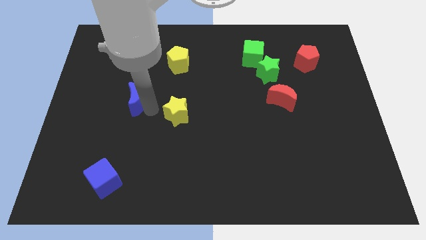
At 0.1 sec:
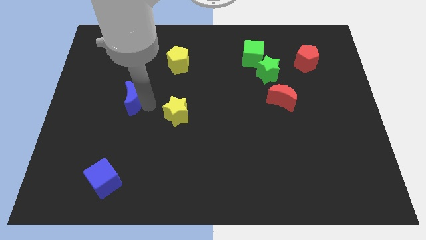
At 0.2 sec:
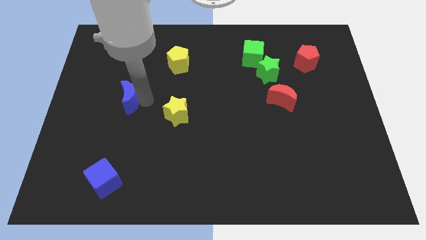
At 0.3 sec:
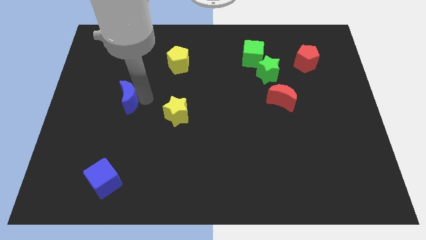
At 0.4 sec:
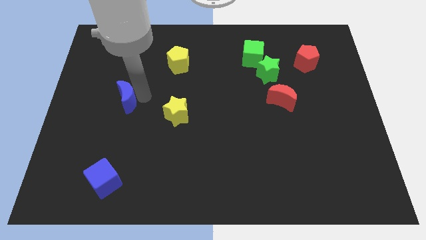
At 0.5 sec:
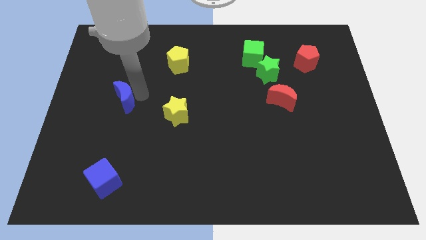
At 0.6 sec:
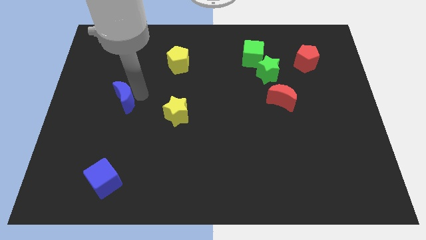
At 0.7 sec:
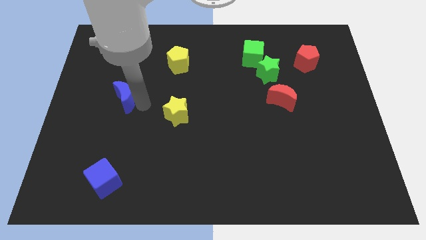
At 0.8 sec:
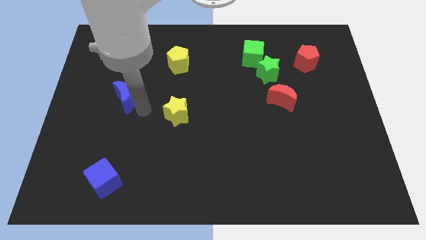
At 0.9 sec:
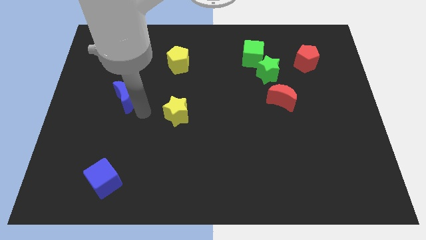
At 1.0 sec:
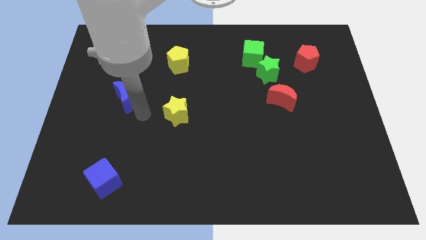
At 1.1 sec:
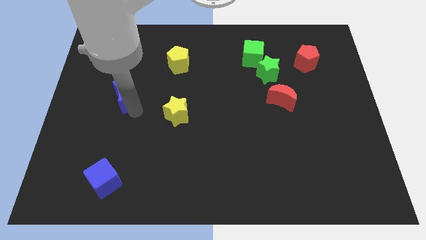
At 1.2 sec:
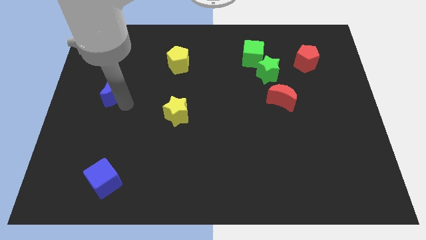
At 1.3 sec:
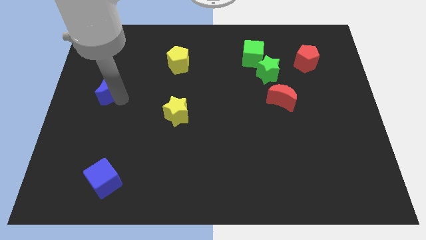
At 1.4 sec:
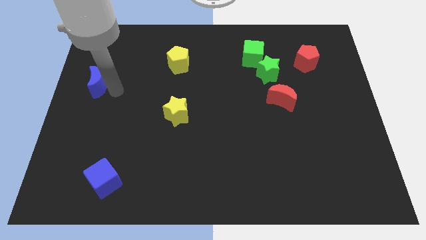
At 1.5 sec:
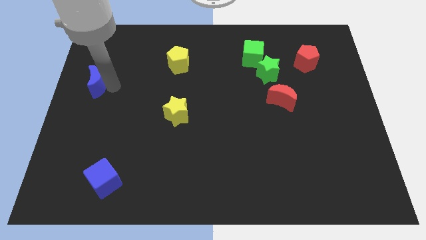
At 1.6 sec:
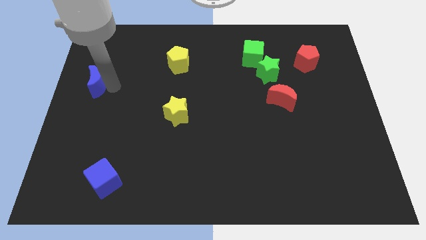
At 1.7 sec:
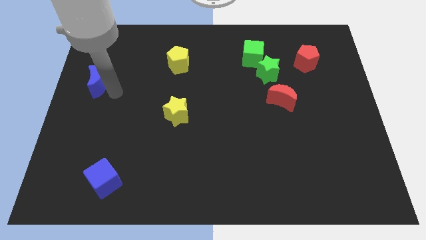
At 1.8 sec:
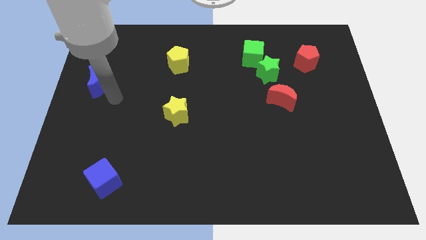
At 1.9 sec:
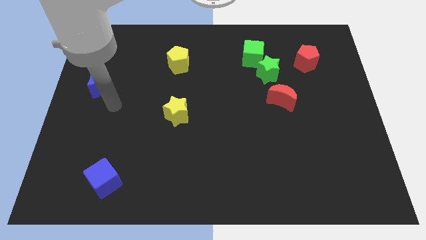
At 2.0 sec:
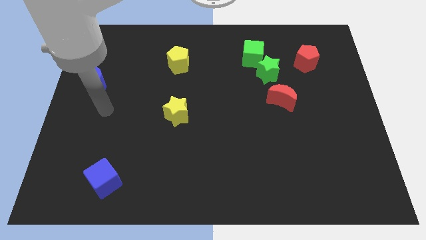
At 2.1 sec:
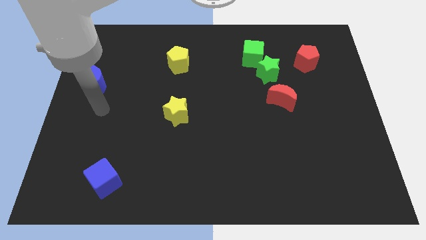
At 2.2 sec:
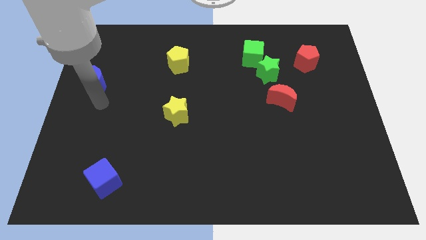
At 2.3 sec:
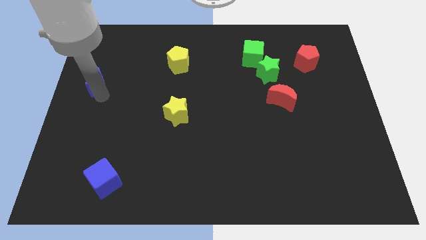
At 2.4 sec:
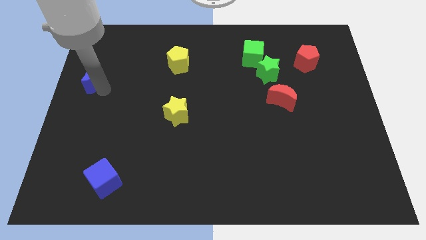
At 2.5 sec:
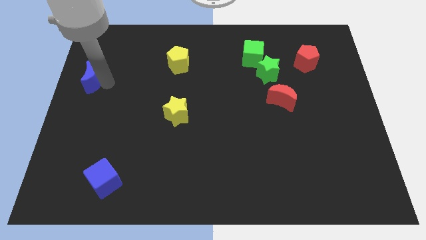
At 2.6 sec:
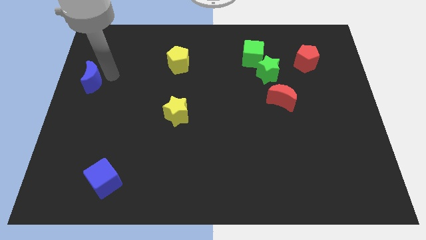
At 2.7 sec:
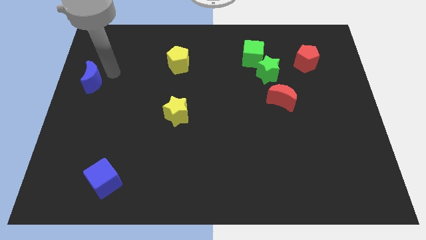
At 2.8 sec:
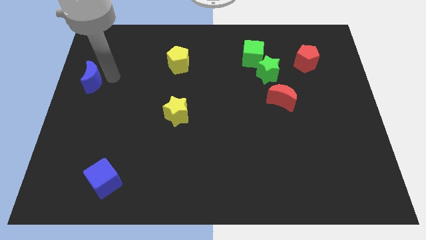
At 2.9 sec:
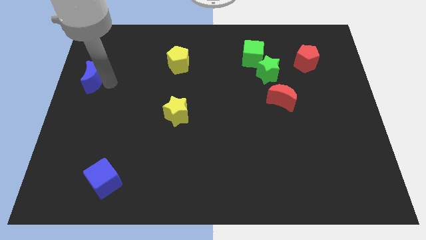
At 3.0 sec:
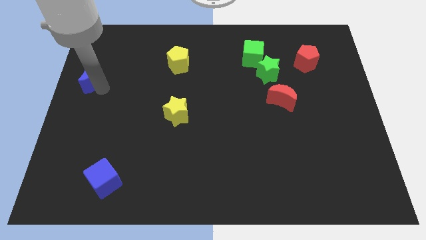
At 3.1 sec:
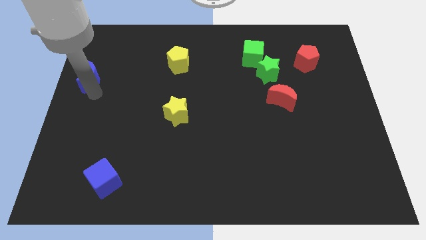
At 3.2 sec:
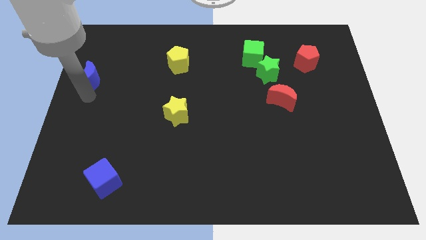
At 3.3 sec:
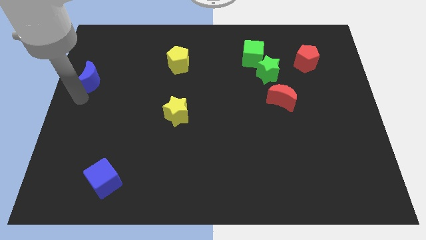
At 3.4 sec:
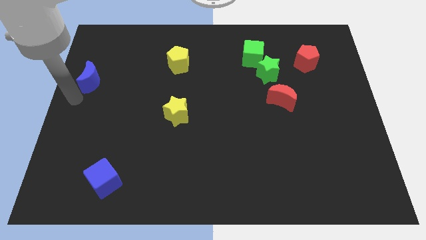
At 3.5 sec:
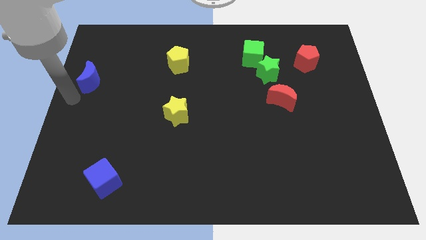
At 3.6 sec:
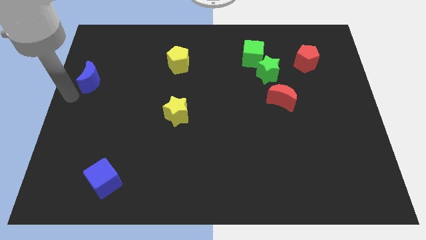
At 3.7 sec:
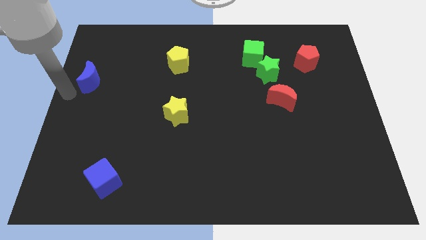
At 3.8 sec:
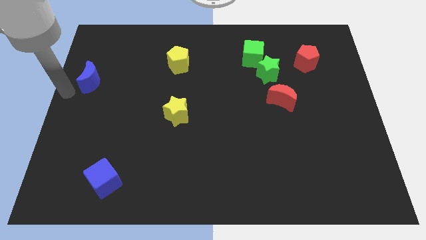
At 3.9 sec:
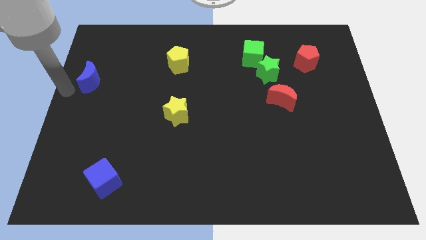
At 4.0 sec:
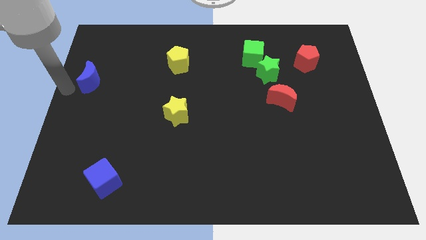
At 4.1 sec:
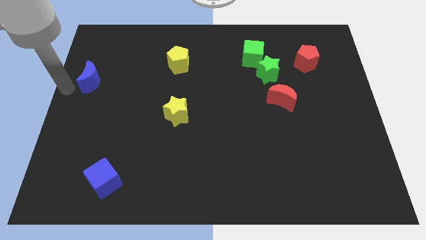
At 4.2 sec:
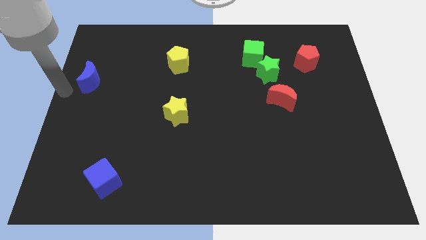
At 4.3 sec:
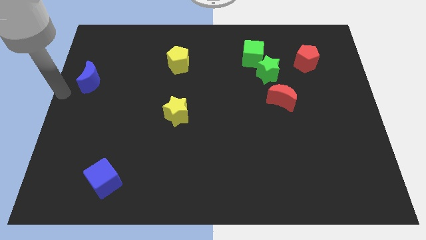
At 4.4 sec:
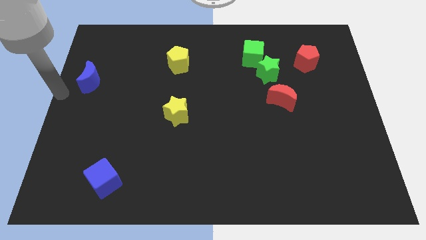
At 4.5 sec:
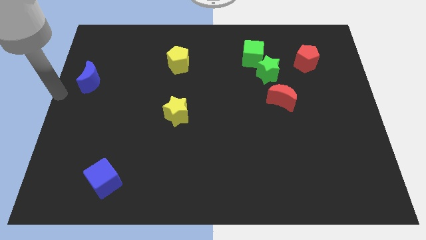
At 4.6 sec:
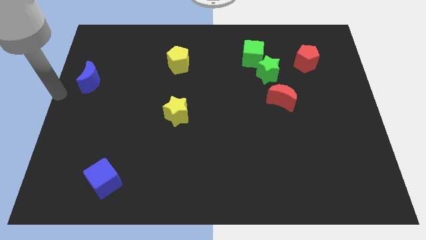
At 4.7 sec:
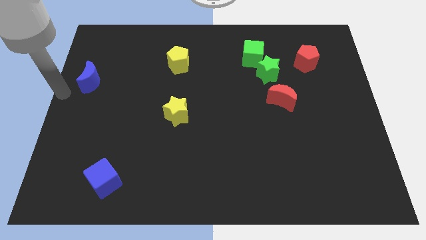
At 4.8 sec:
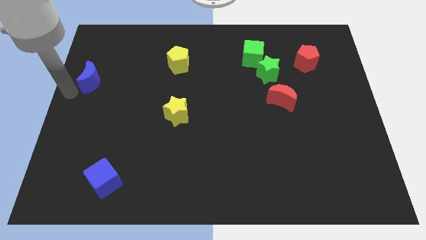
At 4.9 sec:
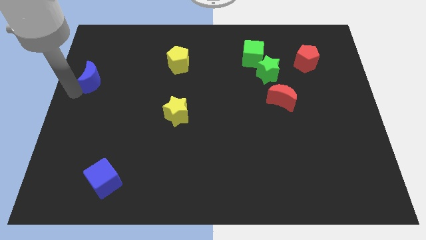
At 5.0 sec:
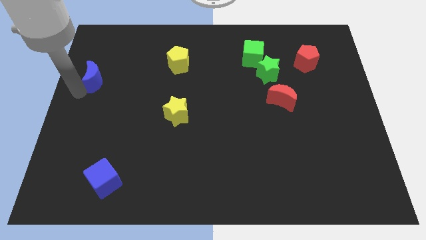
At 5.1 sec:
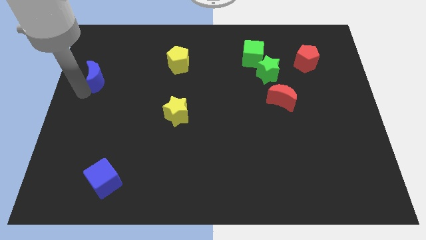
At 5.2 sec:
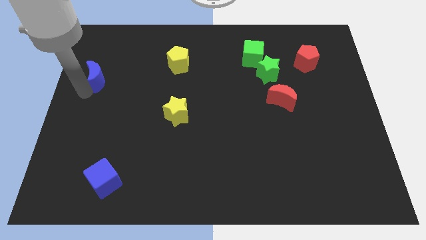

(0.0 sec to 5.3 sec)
place the blue crescent to the left yellow pentagon

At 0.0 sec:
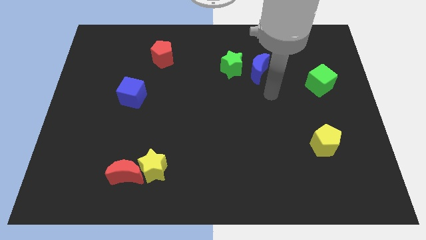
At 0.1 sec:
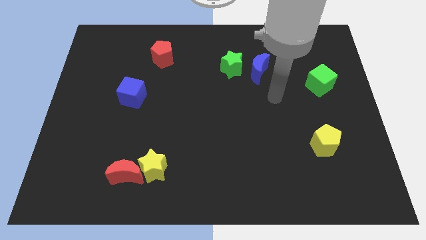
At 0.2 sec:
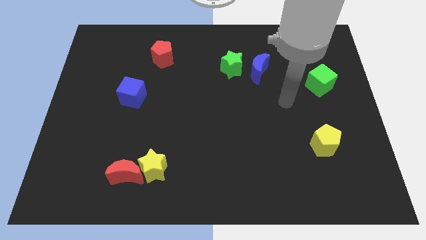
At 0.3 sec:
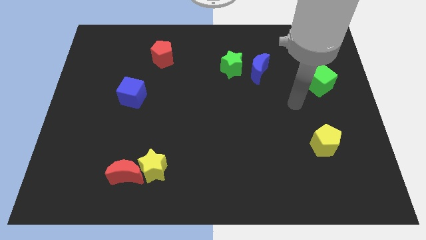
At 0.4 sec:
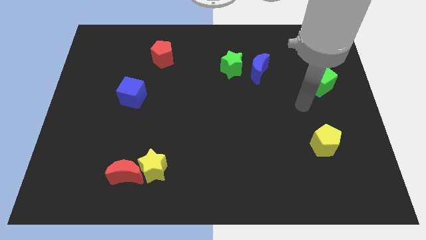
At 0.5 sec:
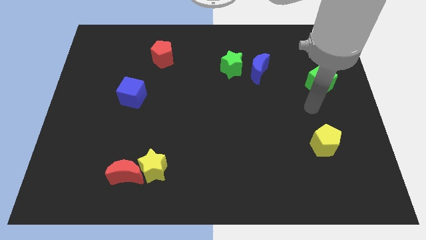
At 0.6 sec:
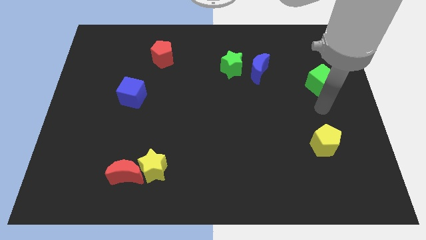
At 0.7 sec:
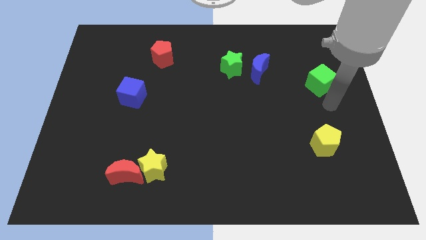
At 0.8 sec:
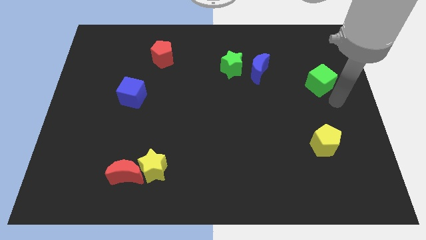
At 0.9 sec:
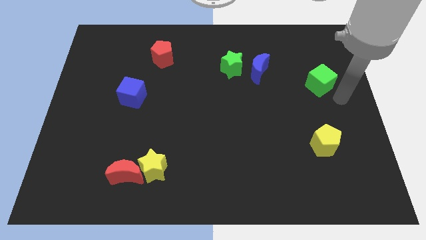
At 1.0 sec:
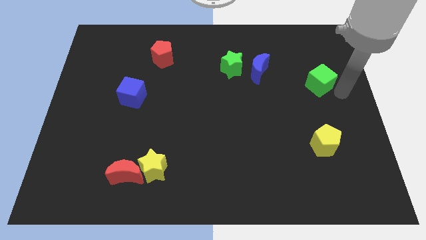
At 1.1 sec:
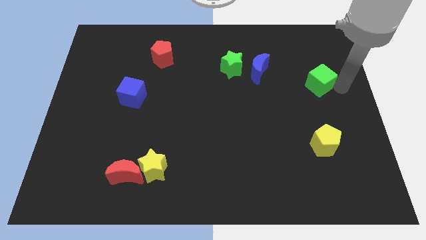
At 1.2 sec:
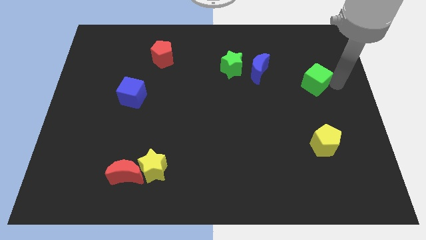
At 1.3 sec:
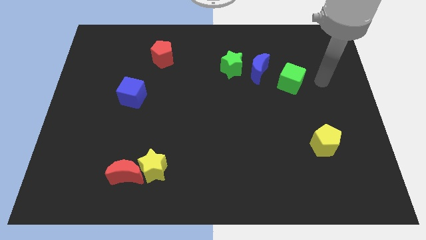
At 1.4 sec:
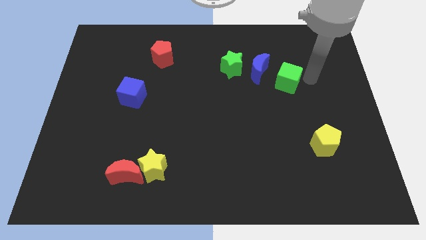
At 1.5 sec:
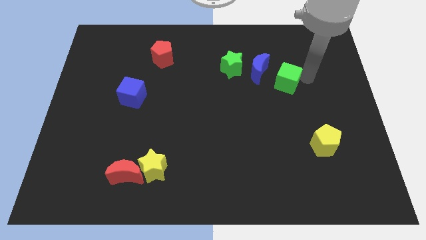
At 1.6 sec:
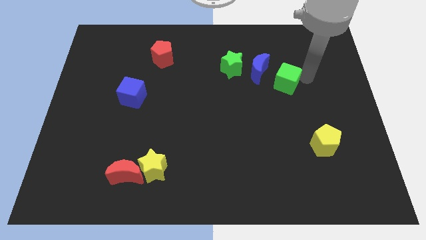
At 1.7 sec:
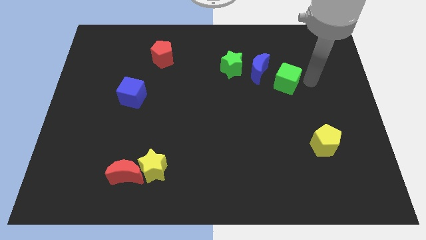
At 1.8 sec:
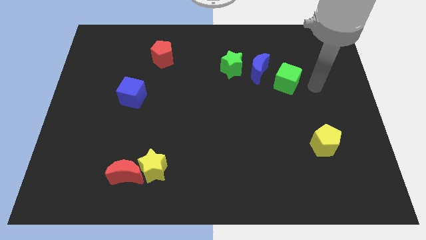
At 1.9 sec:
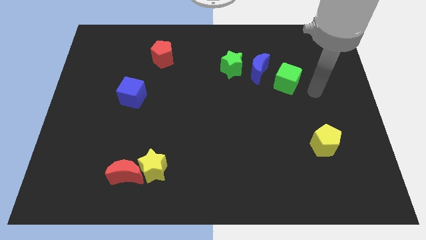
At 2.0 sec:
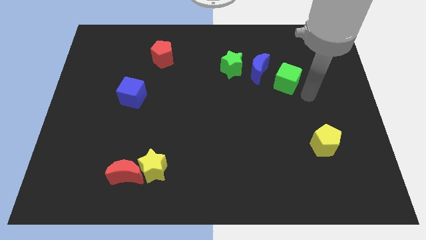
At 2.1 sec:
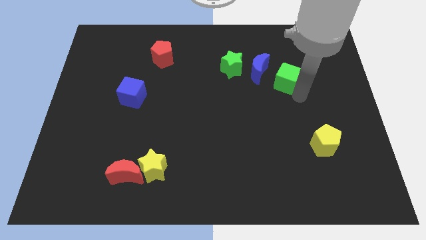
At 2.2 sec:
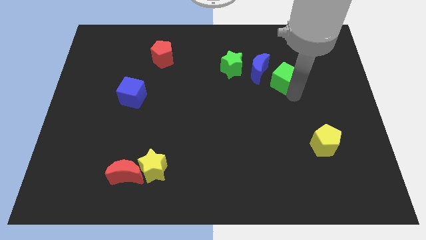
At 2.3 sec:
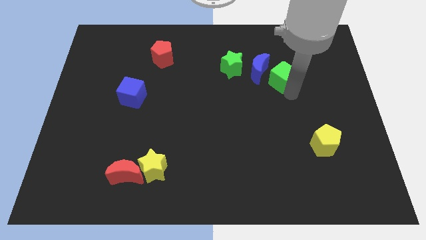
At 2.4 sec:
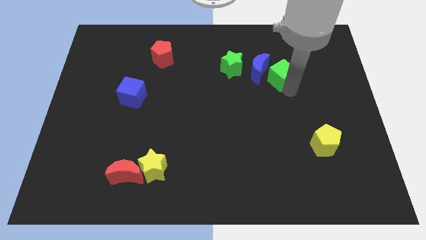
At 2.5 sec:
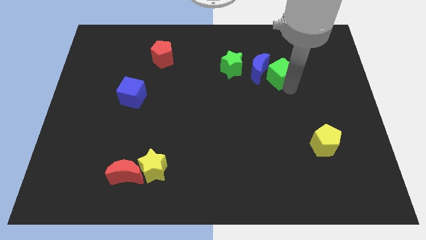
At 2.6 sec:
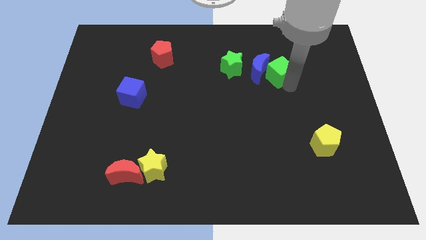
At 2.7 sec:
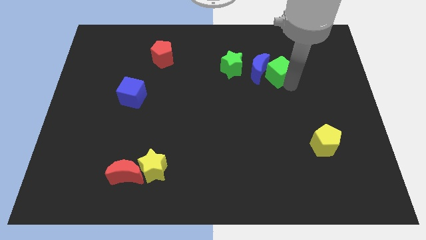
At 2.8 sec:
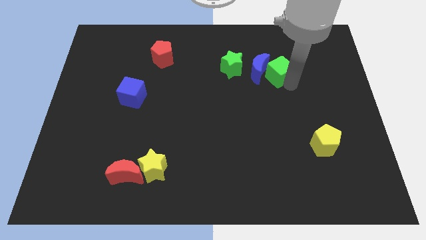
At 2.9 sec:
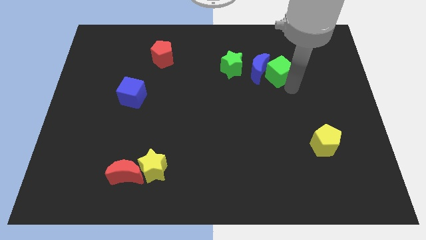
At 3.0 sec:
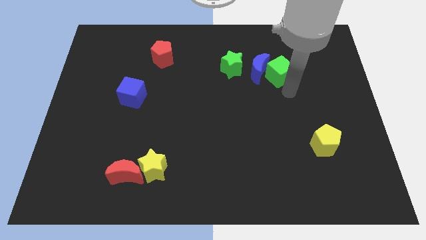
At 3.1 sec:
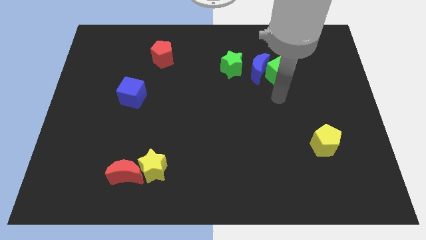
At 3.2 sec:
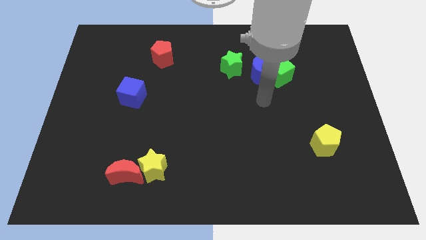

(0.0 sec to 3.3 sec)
push the green cube close to the blue crescent

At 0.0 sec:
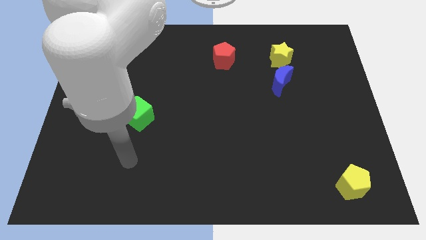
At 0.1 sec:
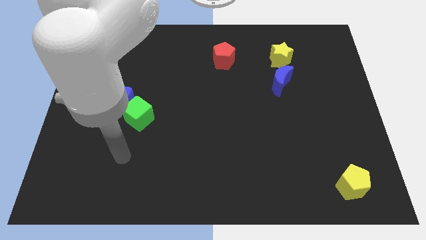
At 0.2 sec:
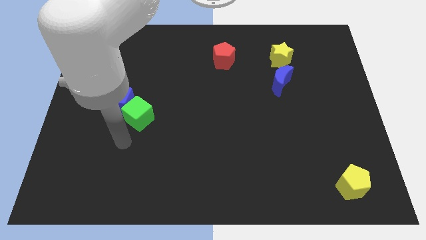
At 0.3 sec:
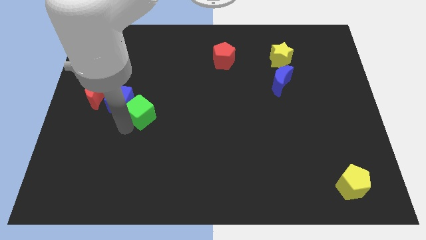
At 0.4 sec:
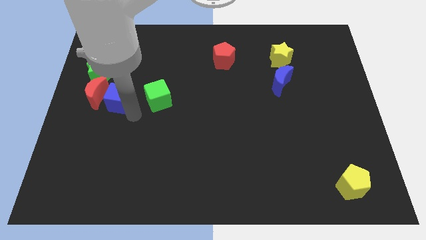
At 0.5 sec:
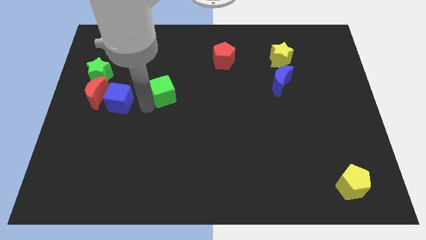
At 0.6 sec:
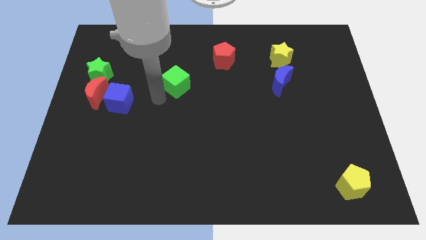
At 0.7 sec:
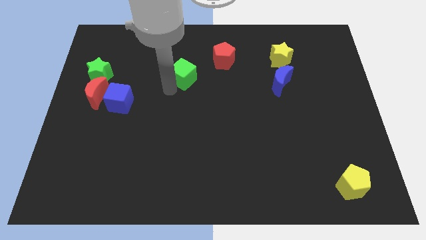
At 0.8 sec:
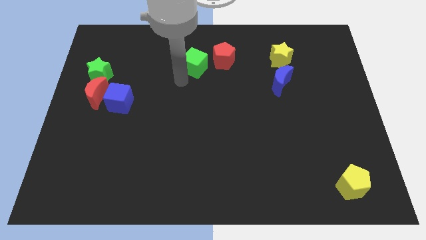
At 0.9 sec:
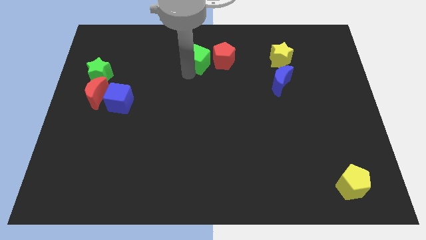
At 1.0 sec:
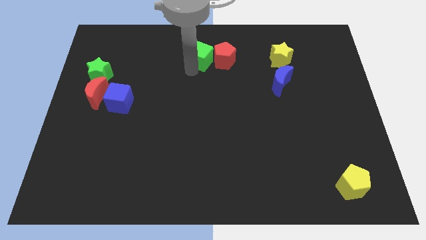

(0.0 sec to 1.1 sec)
push the green cube to the left of red pentagon
